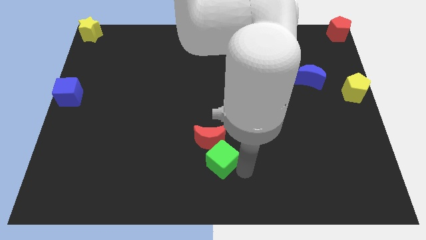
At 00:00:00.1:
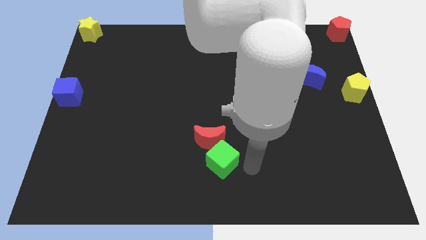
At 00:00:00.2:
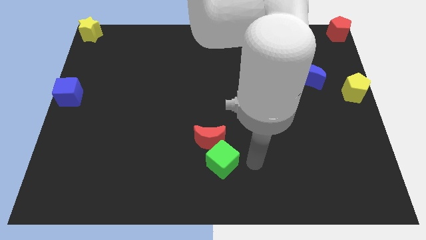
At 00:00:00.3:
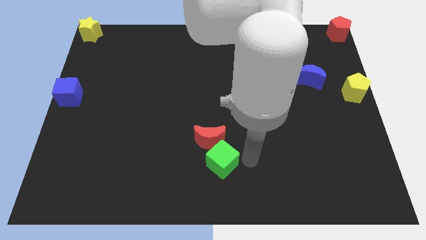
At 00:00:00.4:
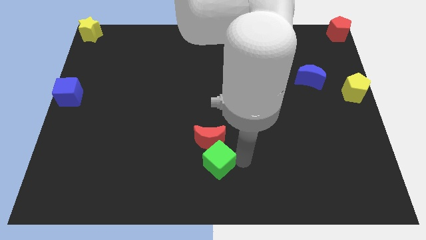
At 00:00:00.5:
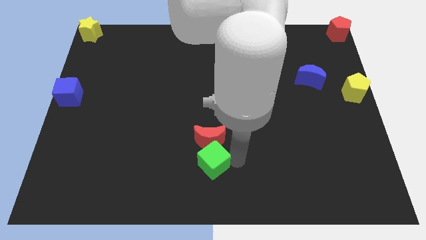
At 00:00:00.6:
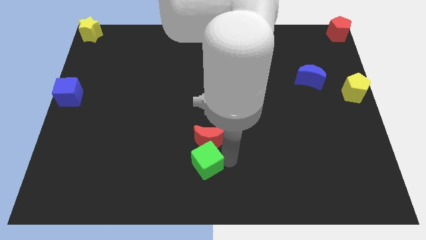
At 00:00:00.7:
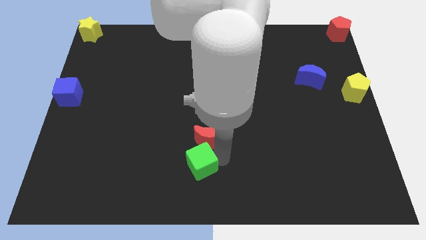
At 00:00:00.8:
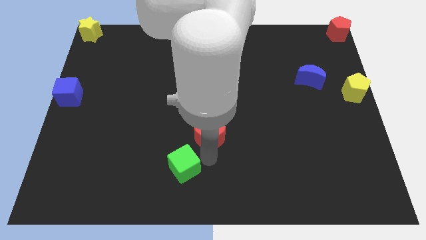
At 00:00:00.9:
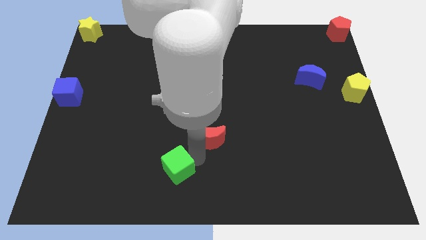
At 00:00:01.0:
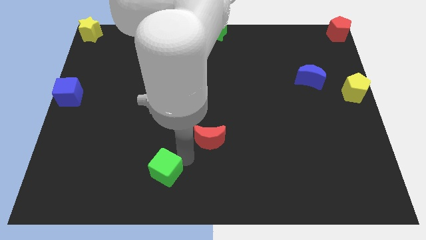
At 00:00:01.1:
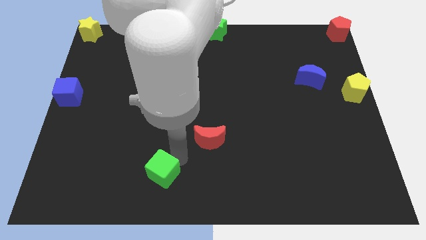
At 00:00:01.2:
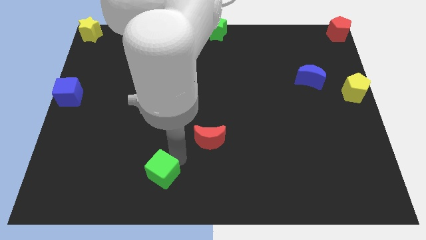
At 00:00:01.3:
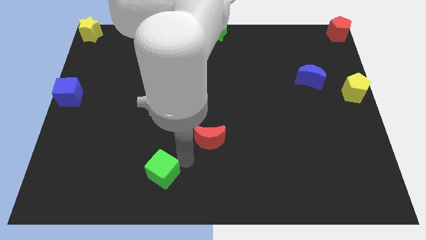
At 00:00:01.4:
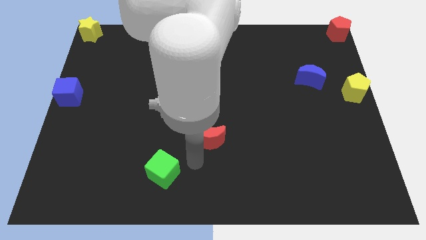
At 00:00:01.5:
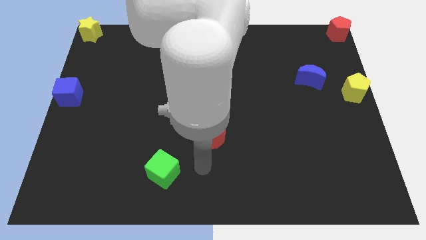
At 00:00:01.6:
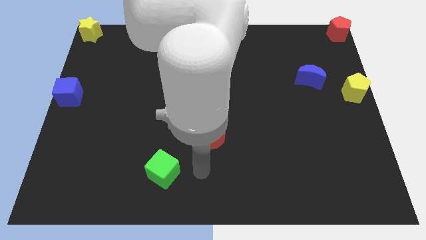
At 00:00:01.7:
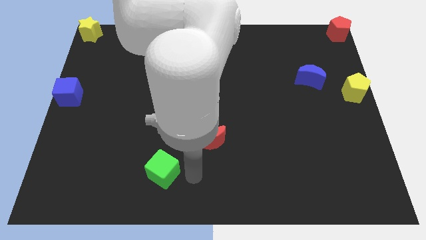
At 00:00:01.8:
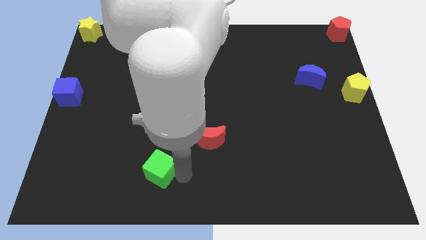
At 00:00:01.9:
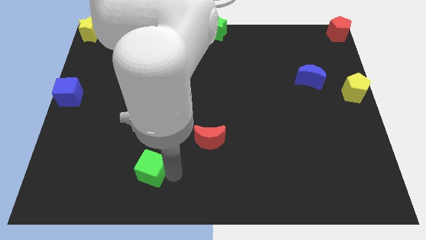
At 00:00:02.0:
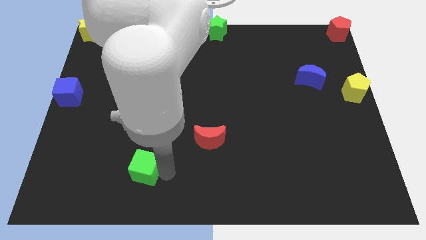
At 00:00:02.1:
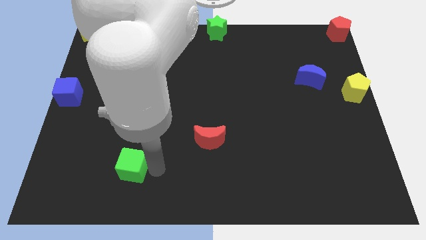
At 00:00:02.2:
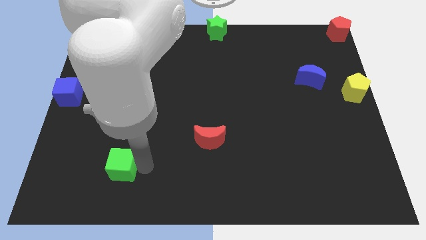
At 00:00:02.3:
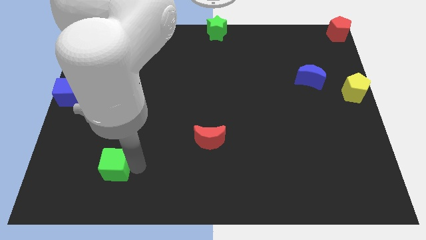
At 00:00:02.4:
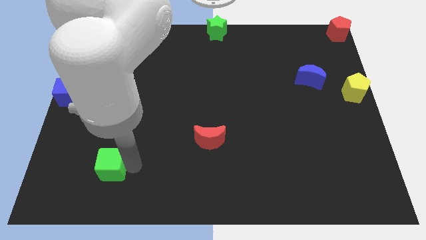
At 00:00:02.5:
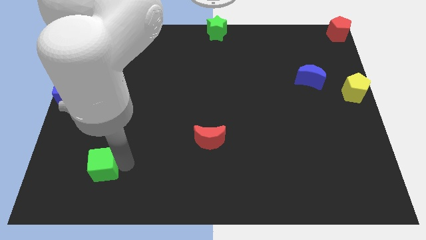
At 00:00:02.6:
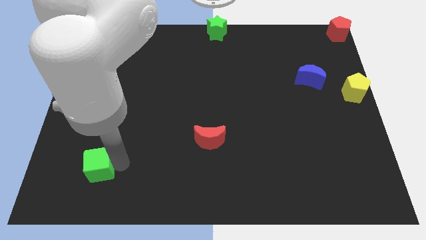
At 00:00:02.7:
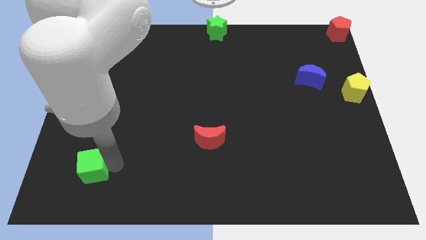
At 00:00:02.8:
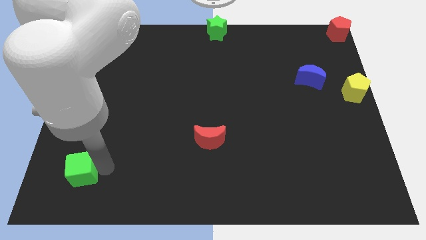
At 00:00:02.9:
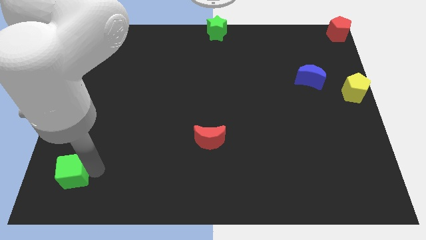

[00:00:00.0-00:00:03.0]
move green cube towards the left side of the board

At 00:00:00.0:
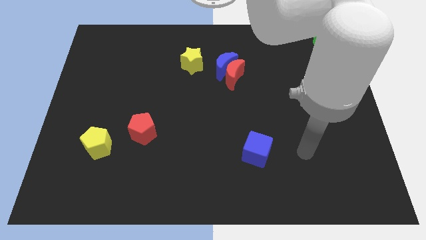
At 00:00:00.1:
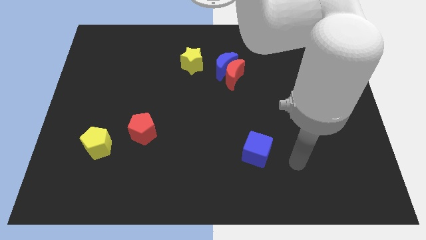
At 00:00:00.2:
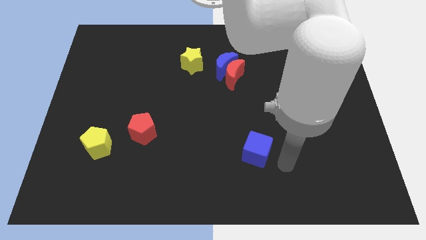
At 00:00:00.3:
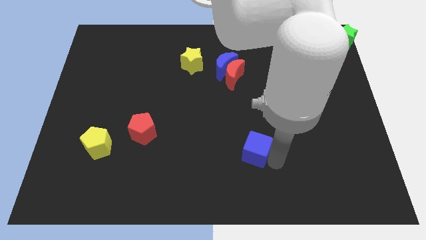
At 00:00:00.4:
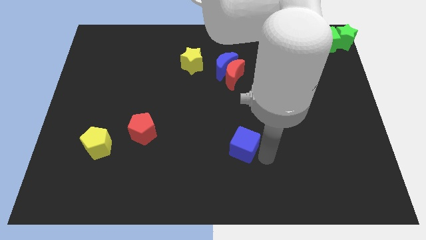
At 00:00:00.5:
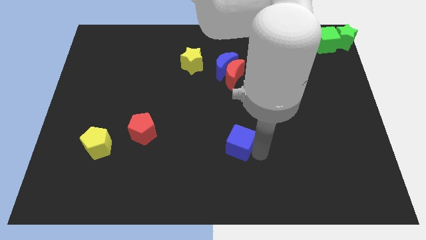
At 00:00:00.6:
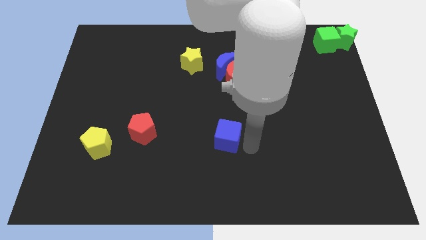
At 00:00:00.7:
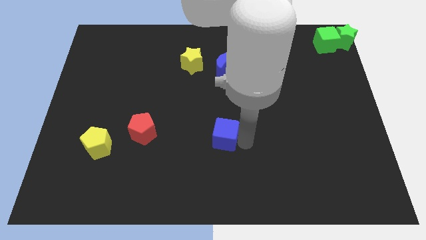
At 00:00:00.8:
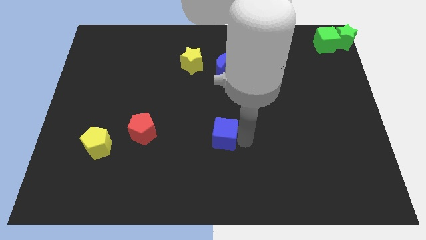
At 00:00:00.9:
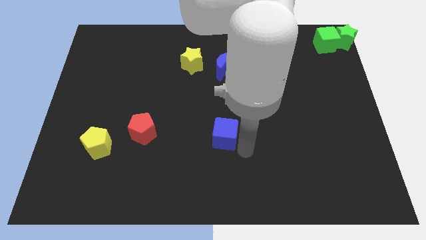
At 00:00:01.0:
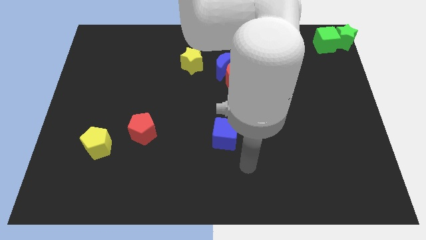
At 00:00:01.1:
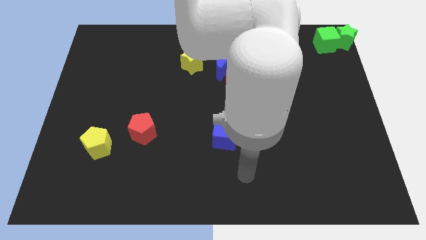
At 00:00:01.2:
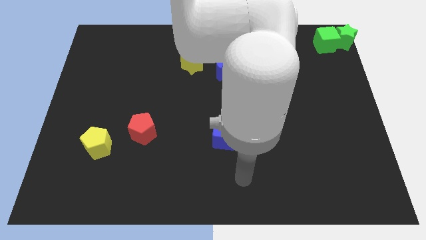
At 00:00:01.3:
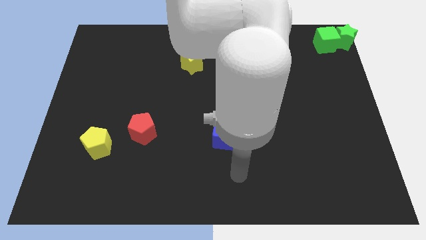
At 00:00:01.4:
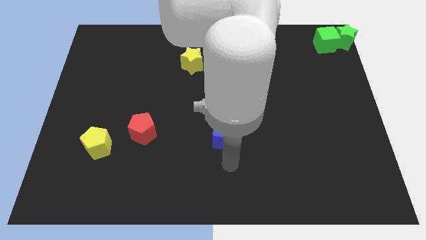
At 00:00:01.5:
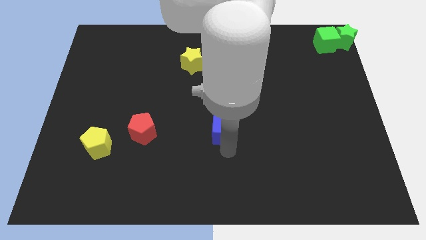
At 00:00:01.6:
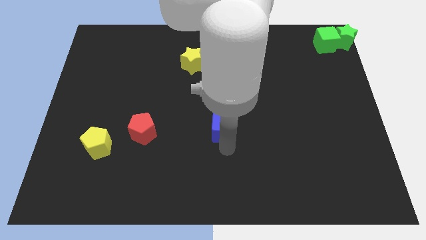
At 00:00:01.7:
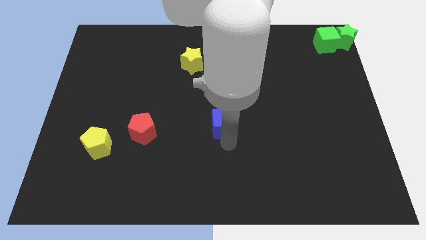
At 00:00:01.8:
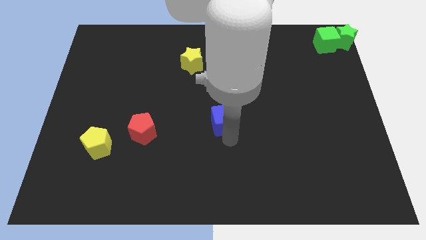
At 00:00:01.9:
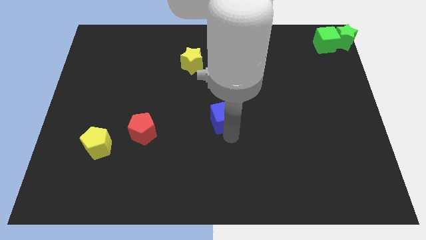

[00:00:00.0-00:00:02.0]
move the blue cube to the center of the board

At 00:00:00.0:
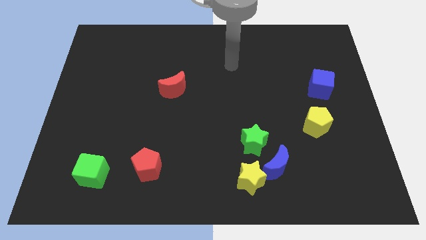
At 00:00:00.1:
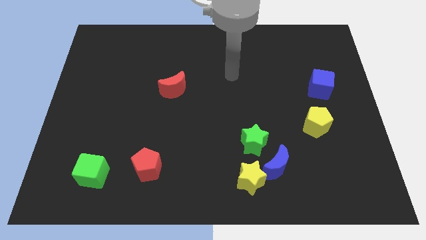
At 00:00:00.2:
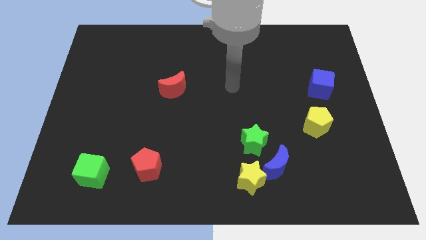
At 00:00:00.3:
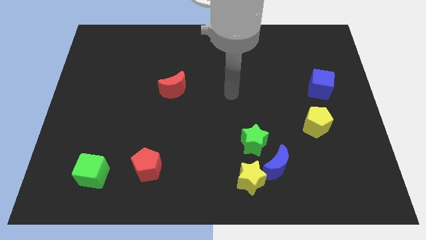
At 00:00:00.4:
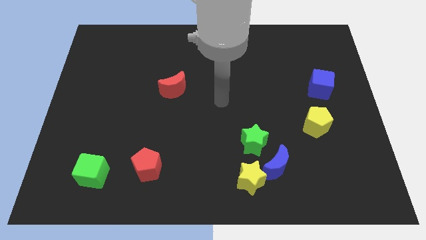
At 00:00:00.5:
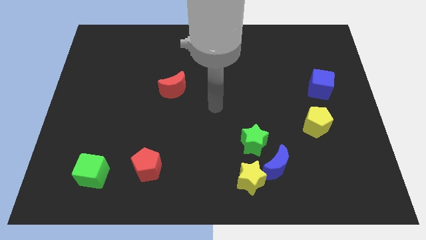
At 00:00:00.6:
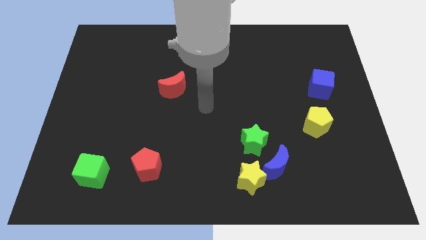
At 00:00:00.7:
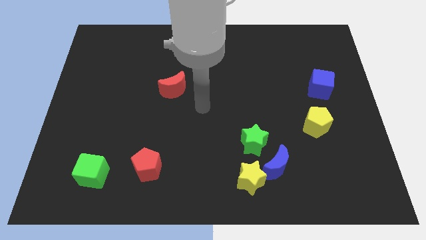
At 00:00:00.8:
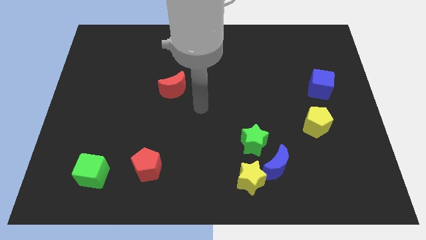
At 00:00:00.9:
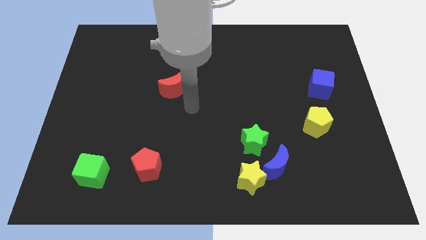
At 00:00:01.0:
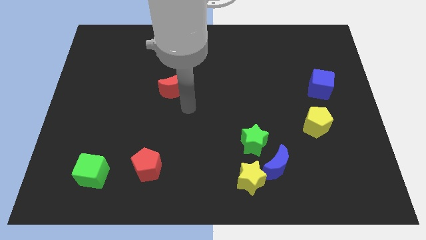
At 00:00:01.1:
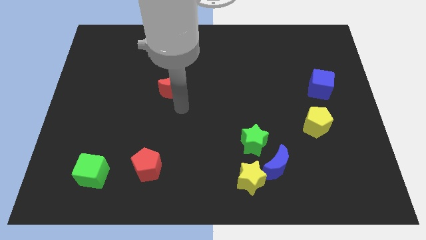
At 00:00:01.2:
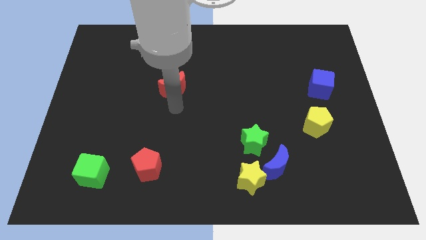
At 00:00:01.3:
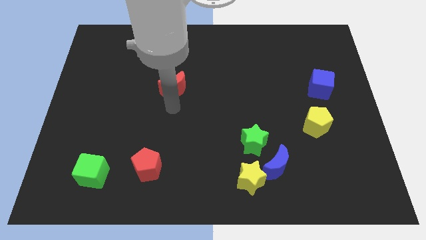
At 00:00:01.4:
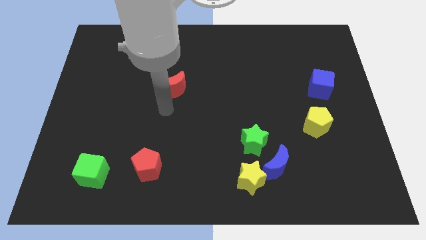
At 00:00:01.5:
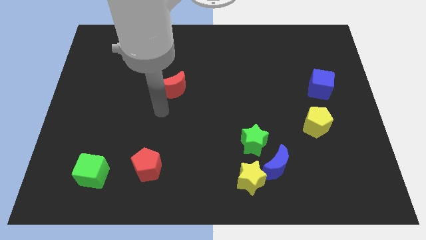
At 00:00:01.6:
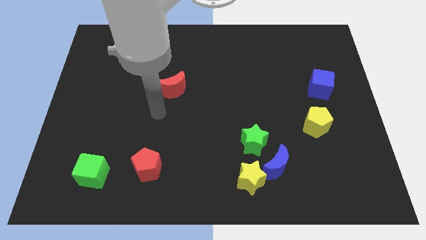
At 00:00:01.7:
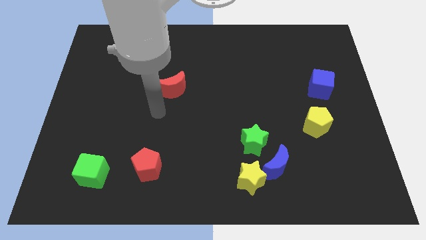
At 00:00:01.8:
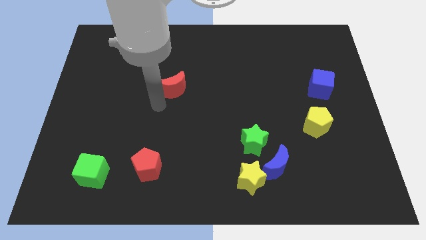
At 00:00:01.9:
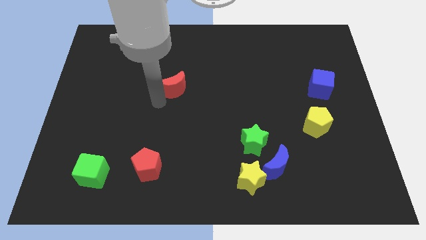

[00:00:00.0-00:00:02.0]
move arm near red moon

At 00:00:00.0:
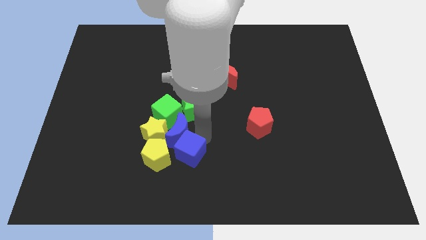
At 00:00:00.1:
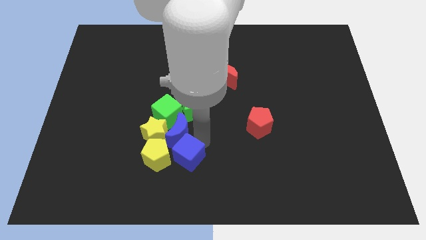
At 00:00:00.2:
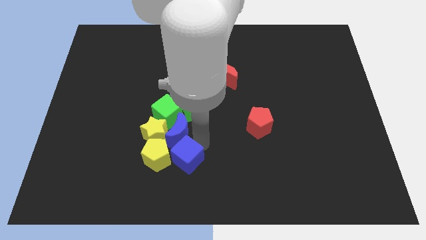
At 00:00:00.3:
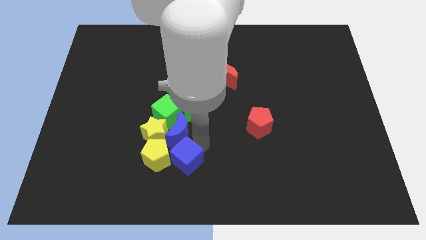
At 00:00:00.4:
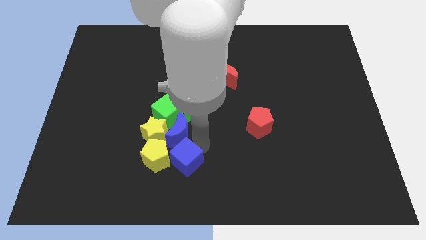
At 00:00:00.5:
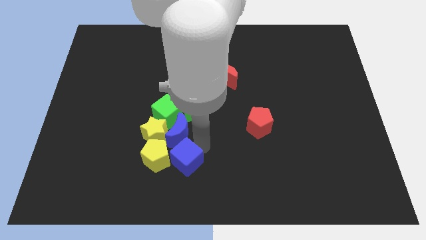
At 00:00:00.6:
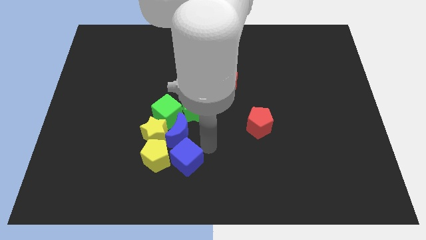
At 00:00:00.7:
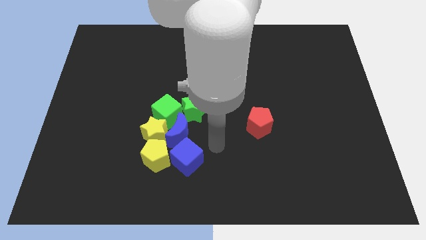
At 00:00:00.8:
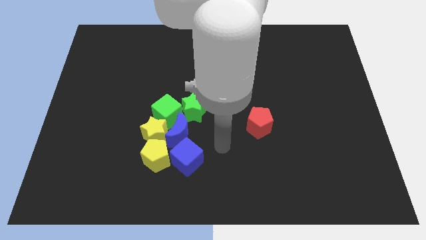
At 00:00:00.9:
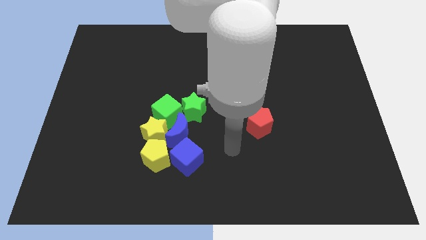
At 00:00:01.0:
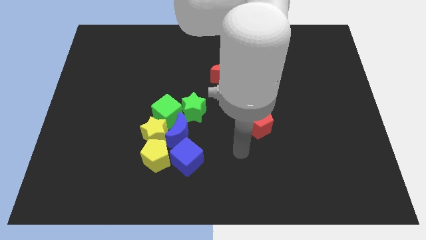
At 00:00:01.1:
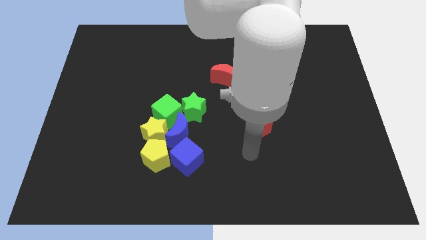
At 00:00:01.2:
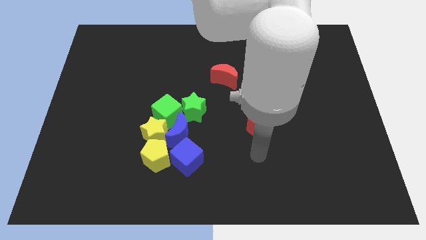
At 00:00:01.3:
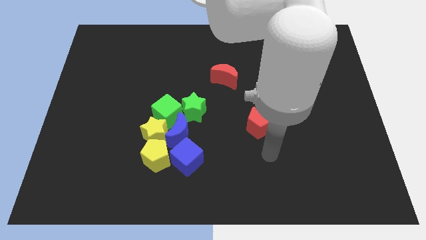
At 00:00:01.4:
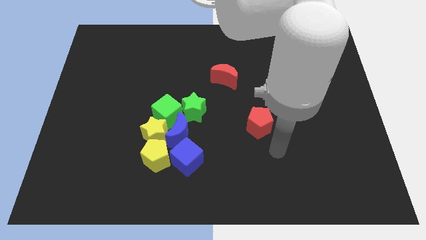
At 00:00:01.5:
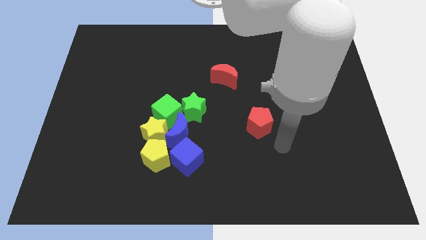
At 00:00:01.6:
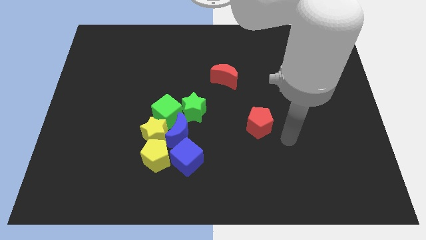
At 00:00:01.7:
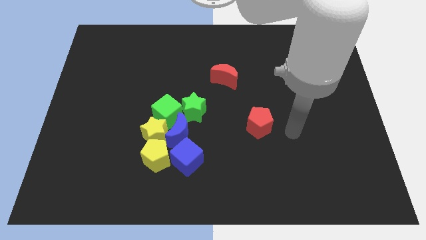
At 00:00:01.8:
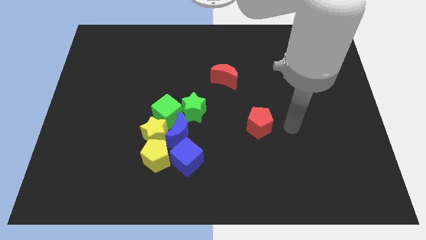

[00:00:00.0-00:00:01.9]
move the arm to the right of red pentagon
